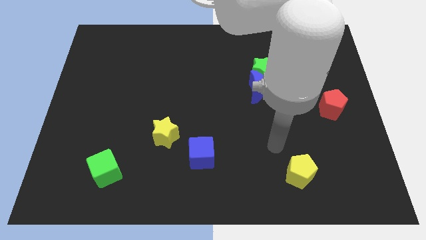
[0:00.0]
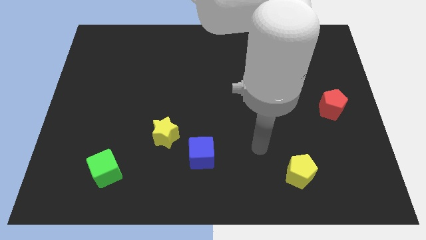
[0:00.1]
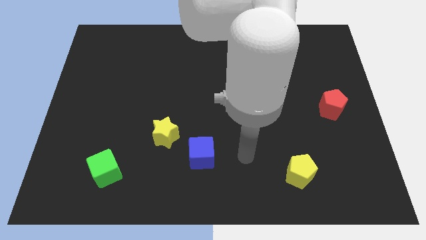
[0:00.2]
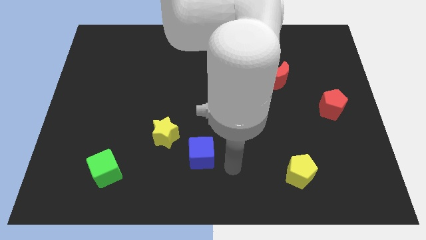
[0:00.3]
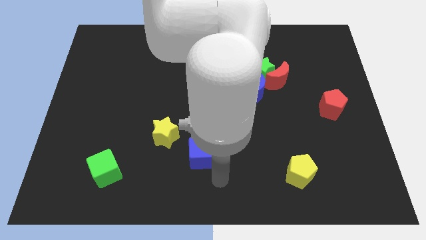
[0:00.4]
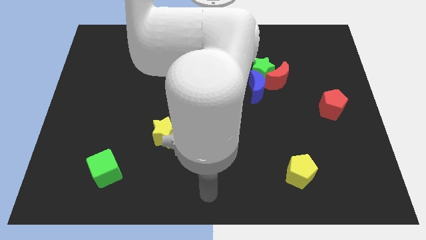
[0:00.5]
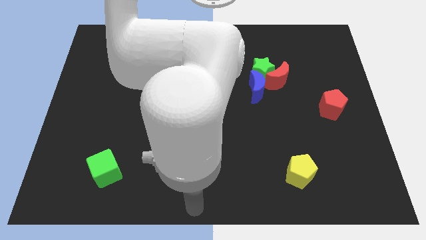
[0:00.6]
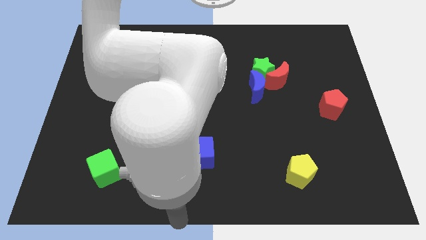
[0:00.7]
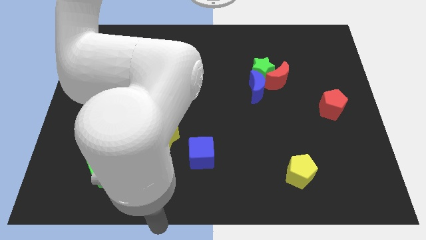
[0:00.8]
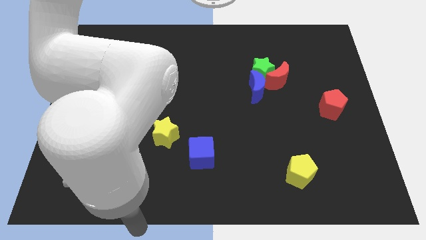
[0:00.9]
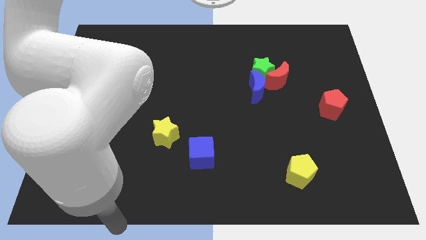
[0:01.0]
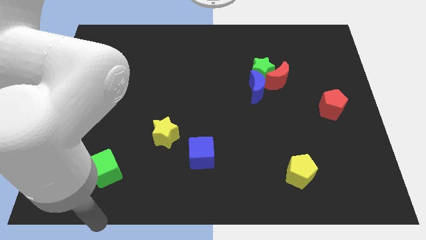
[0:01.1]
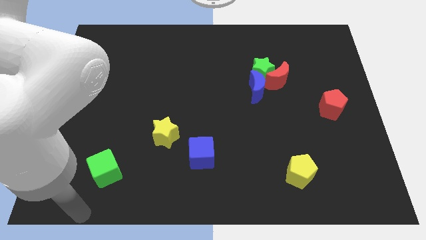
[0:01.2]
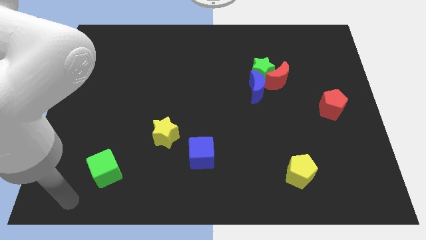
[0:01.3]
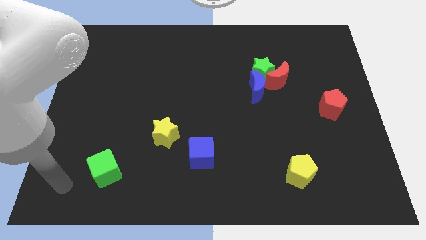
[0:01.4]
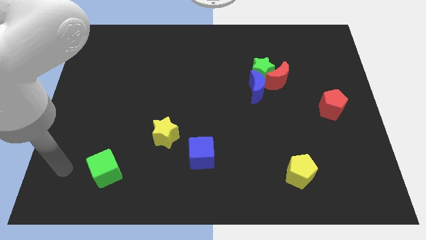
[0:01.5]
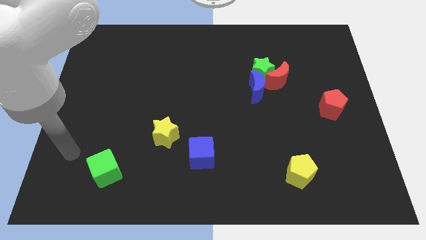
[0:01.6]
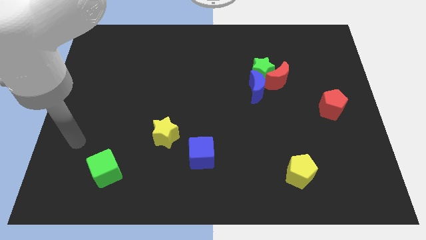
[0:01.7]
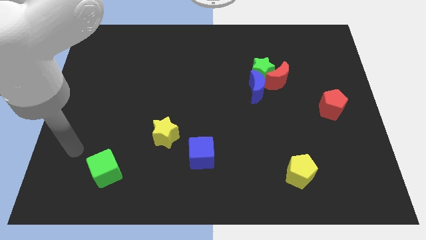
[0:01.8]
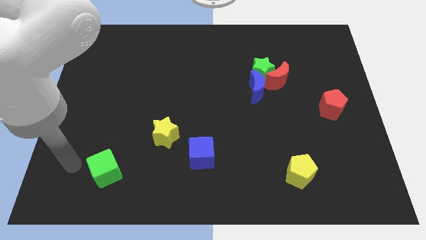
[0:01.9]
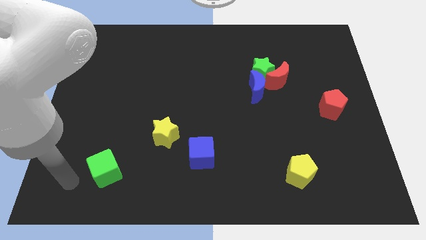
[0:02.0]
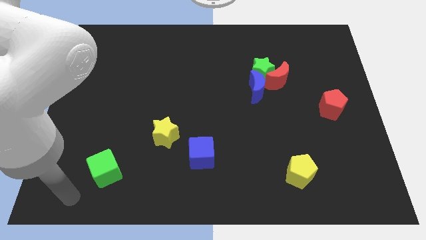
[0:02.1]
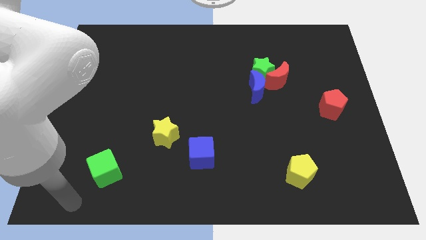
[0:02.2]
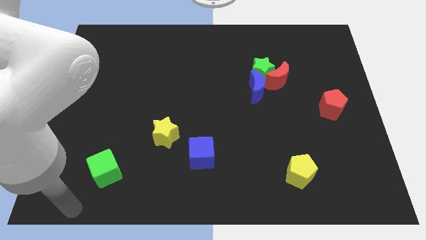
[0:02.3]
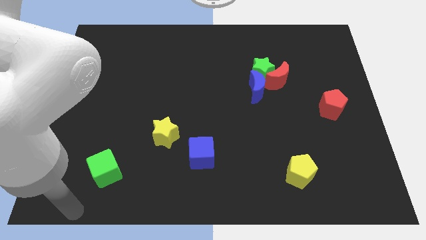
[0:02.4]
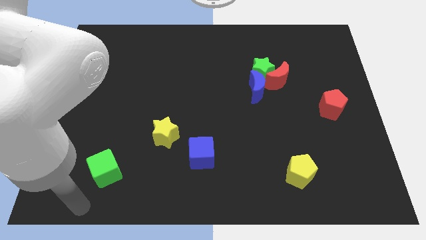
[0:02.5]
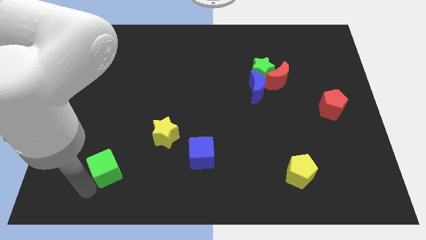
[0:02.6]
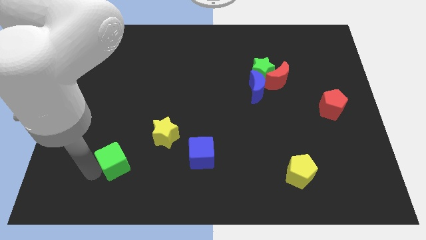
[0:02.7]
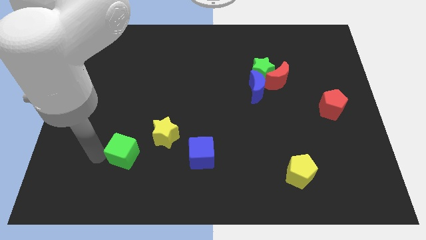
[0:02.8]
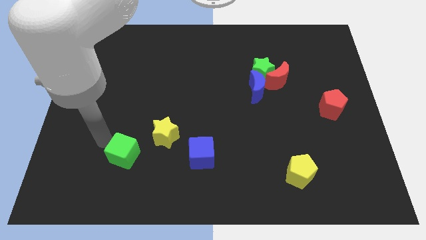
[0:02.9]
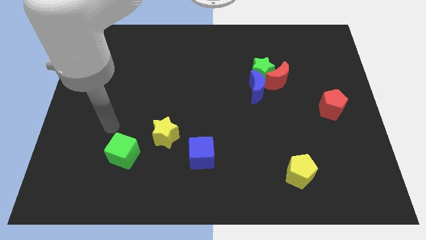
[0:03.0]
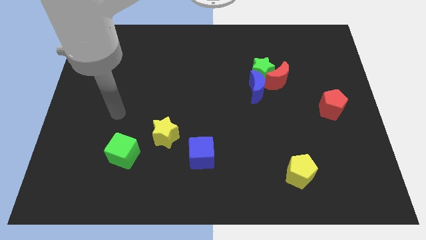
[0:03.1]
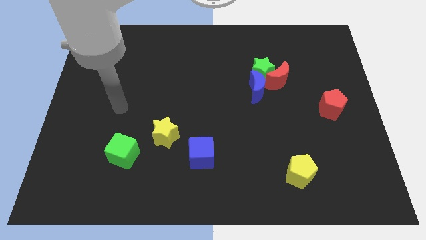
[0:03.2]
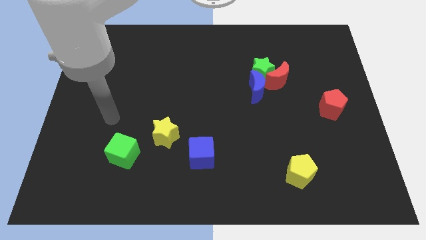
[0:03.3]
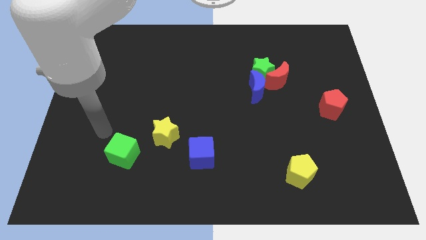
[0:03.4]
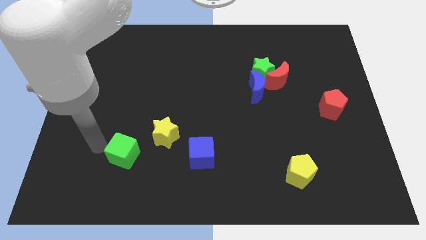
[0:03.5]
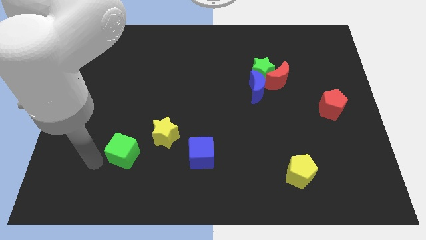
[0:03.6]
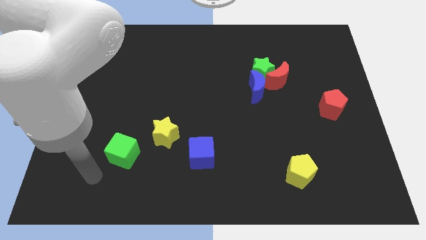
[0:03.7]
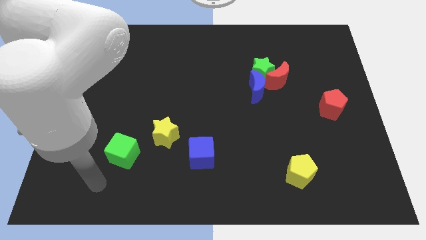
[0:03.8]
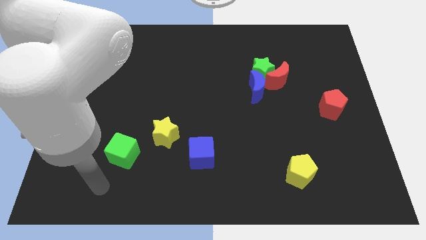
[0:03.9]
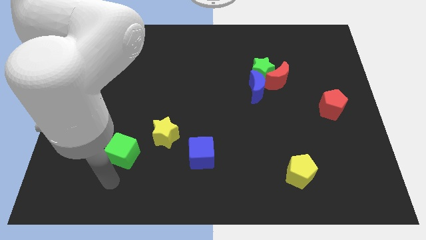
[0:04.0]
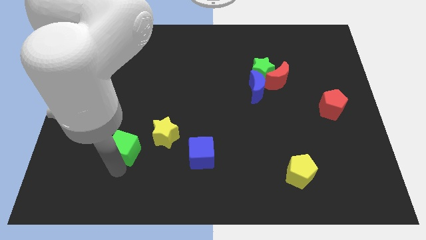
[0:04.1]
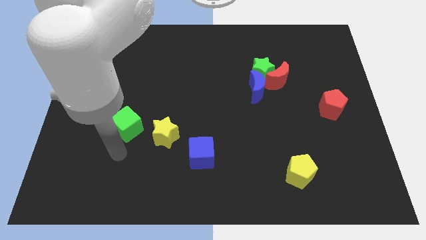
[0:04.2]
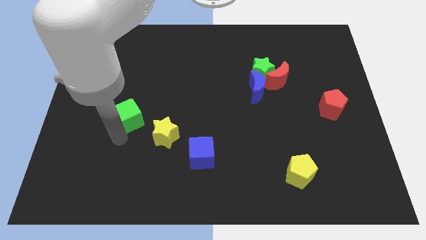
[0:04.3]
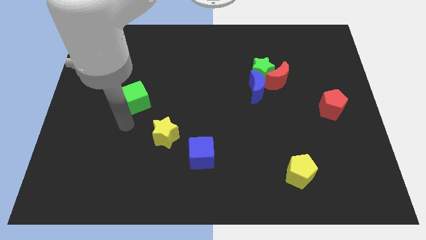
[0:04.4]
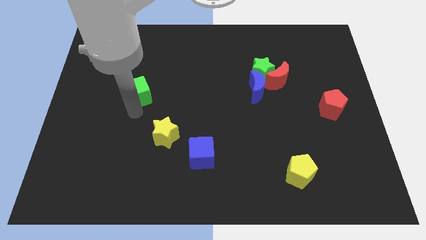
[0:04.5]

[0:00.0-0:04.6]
place the green cube diagonally above the yellow star

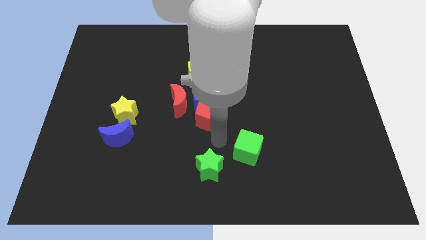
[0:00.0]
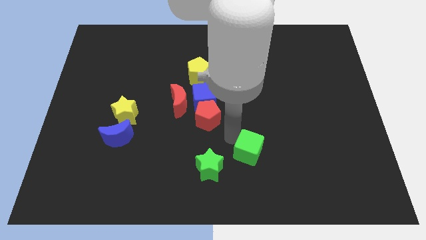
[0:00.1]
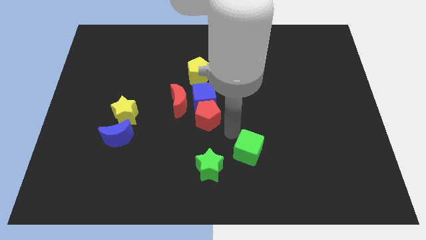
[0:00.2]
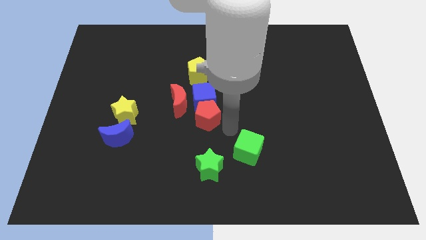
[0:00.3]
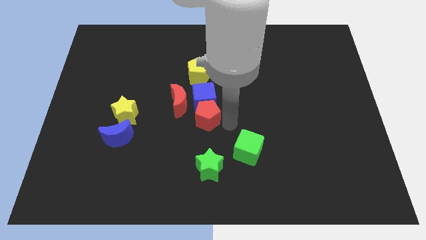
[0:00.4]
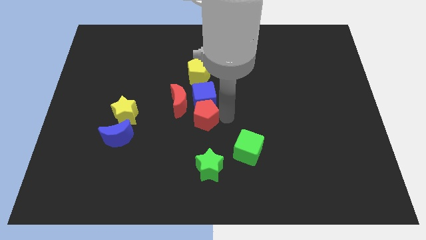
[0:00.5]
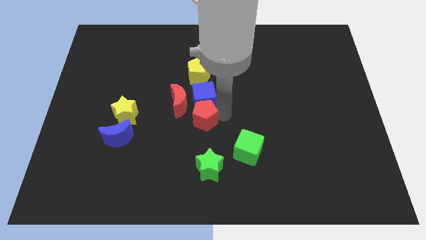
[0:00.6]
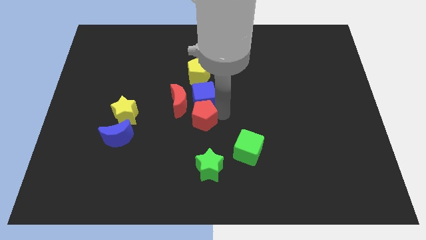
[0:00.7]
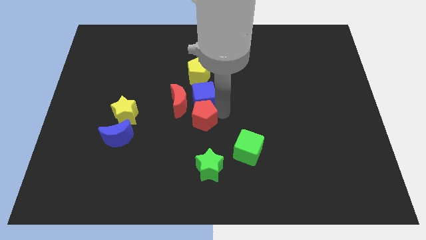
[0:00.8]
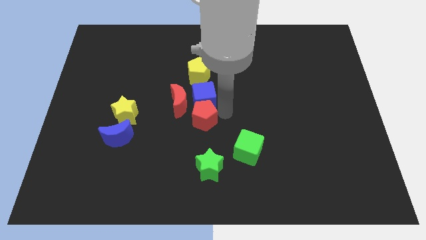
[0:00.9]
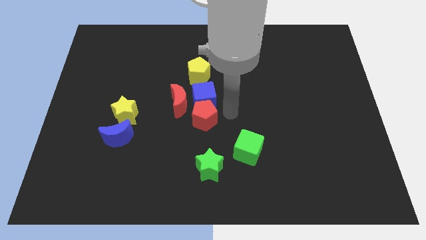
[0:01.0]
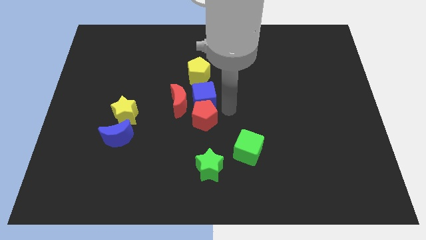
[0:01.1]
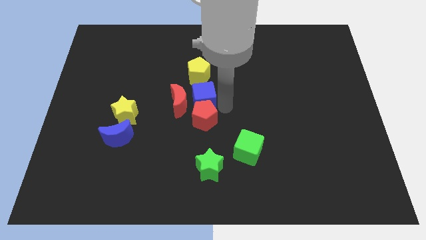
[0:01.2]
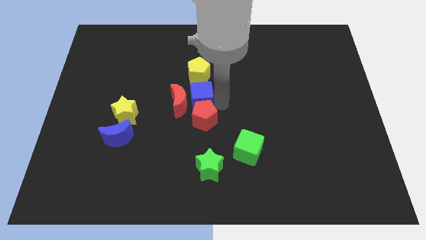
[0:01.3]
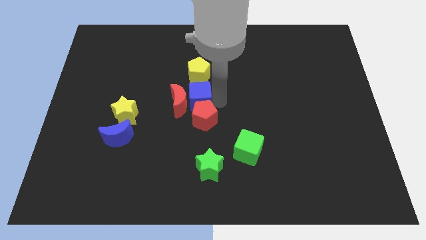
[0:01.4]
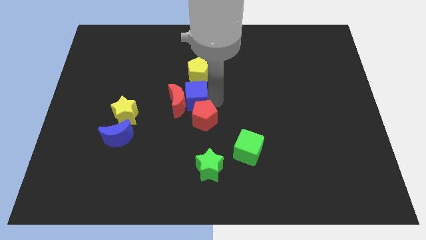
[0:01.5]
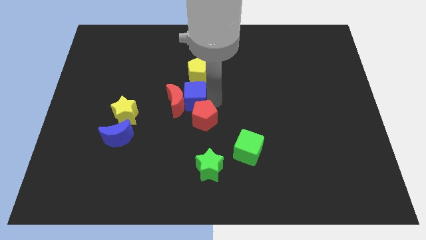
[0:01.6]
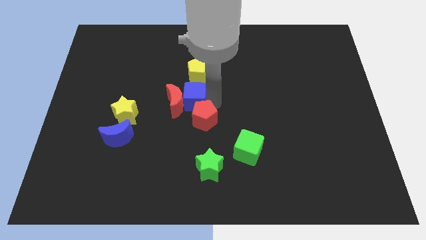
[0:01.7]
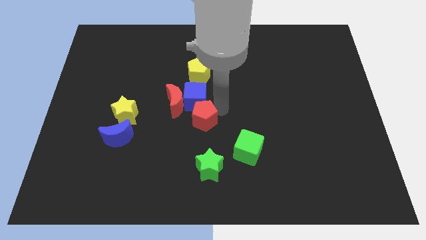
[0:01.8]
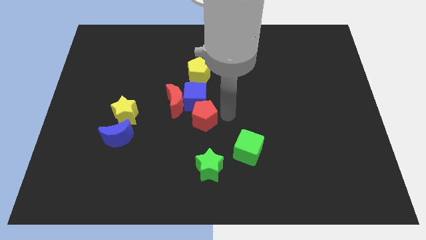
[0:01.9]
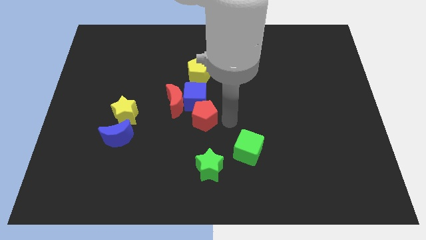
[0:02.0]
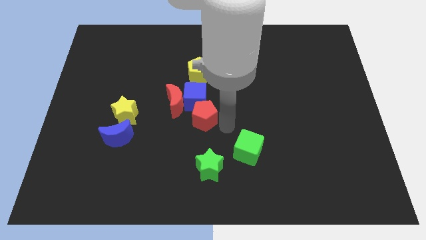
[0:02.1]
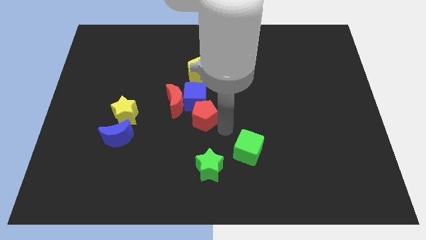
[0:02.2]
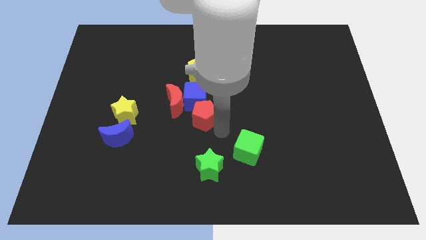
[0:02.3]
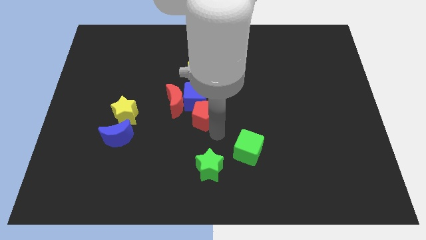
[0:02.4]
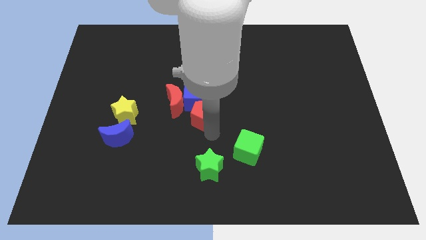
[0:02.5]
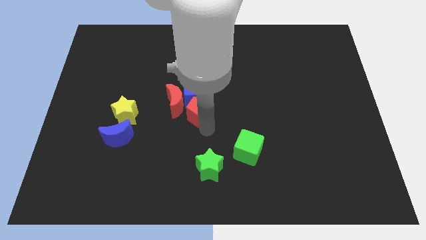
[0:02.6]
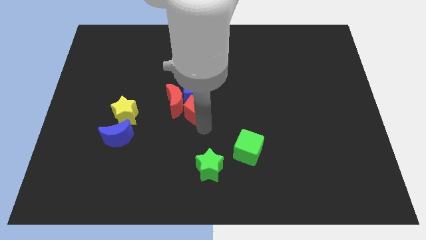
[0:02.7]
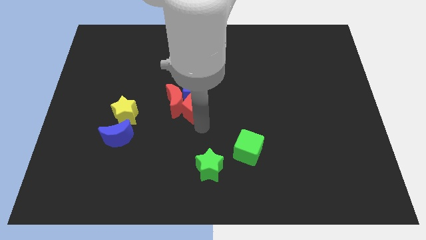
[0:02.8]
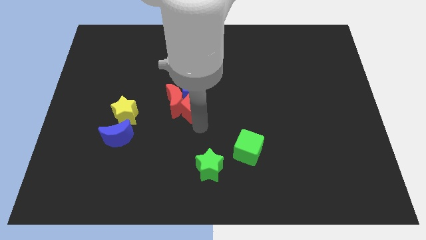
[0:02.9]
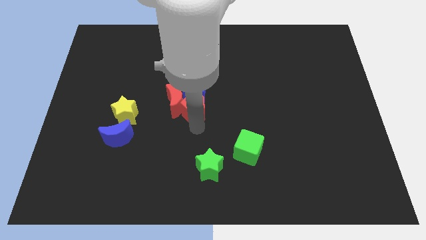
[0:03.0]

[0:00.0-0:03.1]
move blue cube into the red crescent

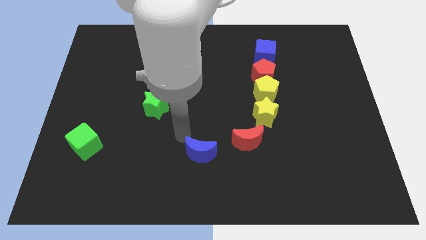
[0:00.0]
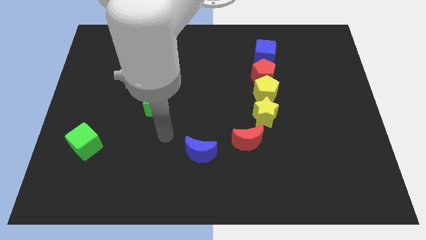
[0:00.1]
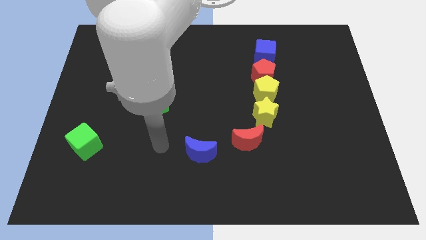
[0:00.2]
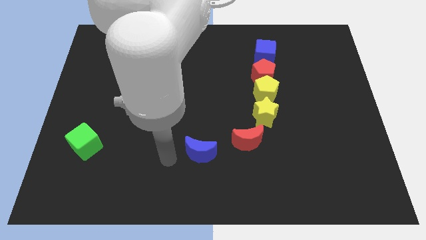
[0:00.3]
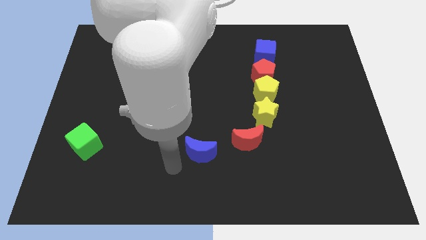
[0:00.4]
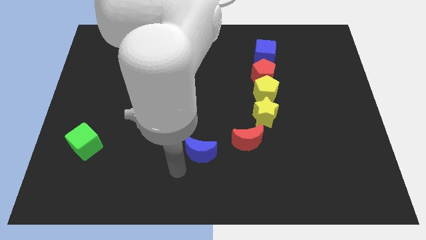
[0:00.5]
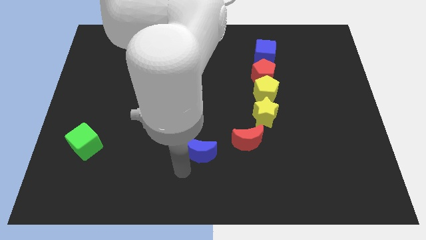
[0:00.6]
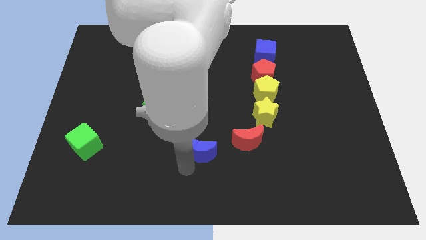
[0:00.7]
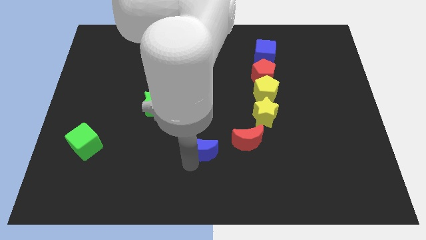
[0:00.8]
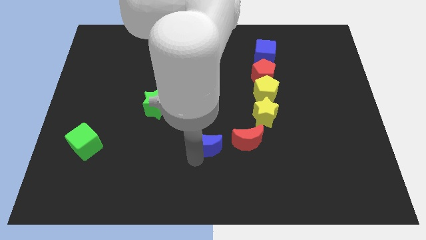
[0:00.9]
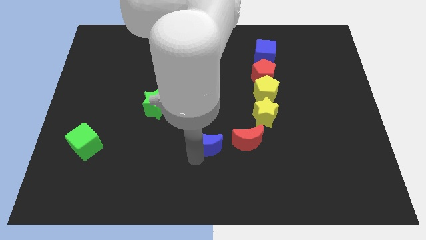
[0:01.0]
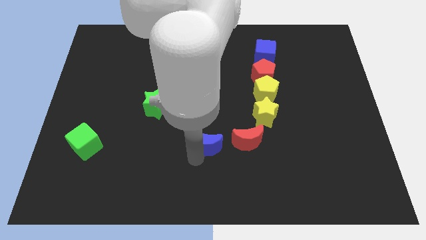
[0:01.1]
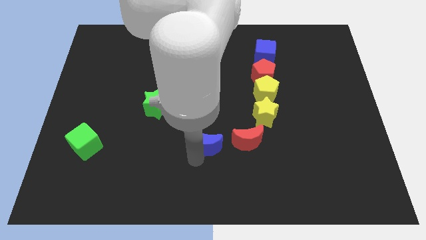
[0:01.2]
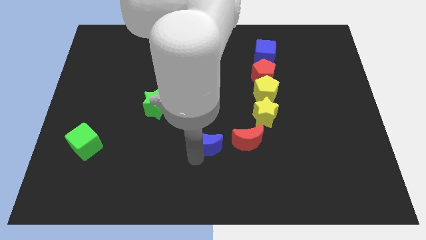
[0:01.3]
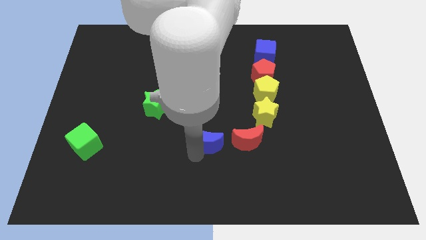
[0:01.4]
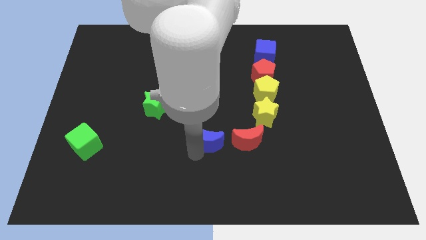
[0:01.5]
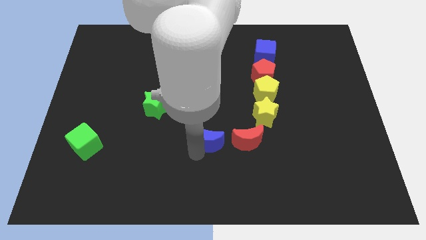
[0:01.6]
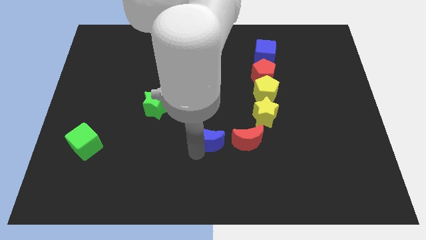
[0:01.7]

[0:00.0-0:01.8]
move blue cube closer to the red moon
